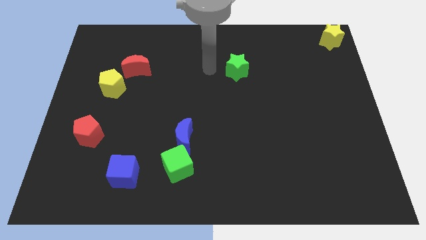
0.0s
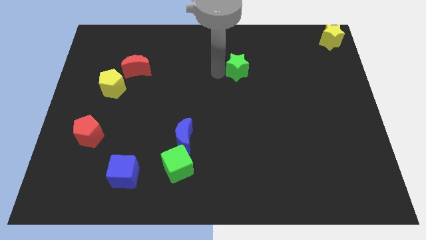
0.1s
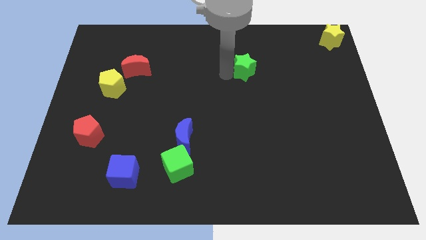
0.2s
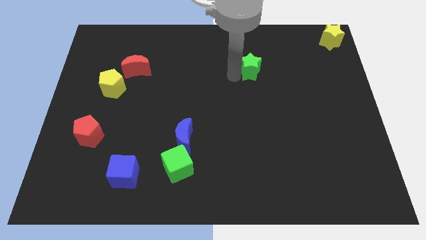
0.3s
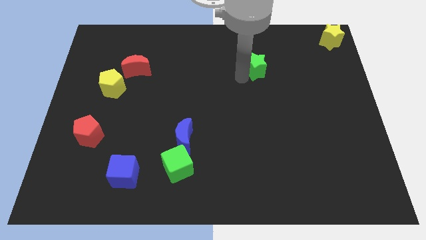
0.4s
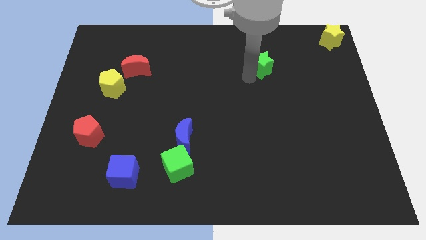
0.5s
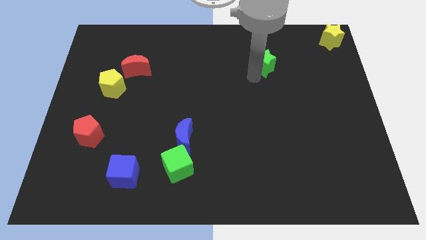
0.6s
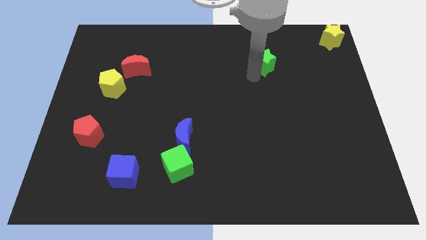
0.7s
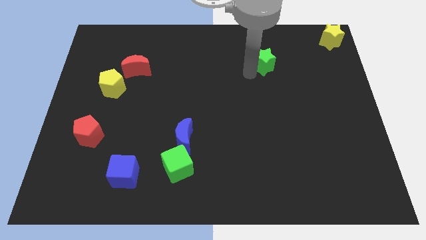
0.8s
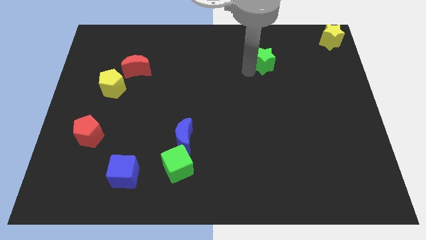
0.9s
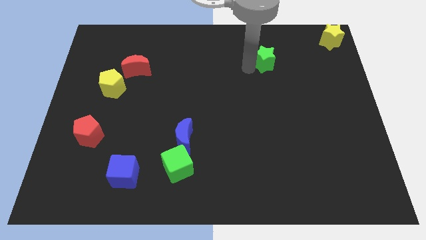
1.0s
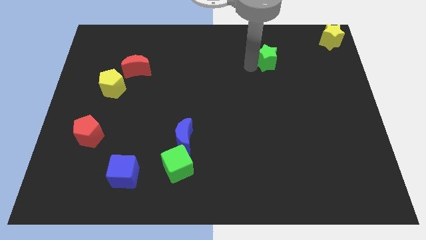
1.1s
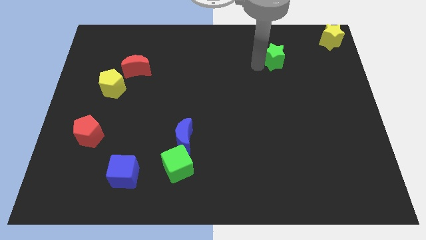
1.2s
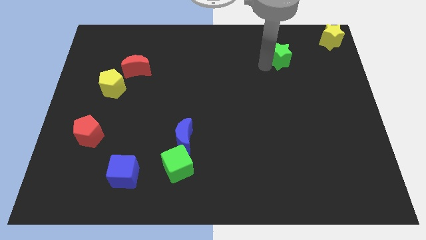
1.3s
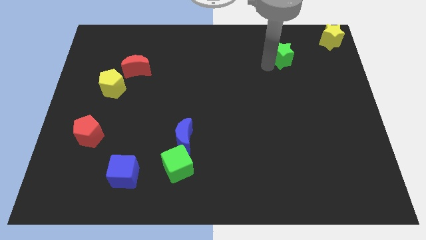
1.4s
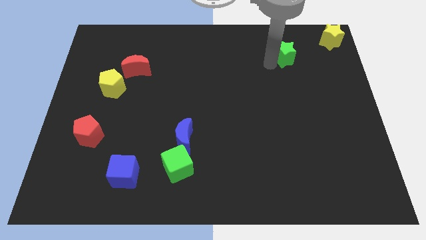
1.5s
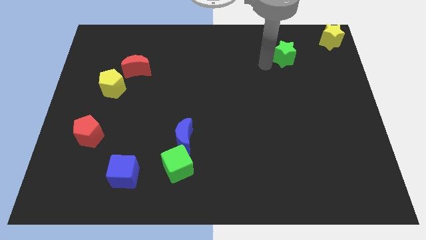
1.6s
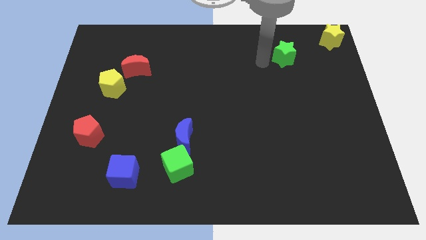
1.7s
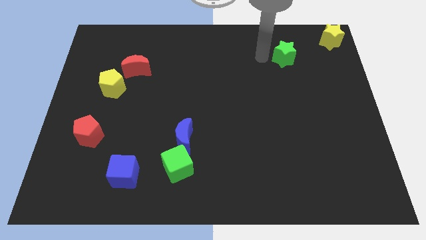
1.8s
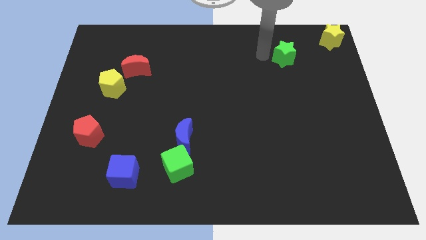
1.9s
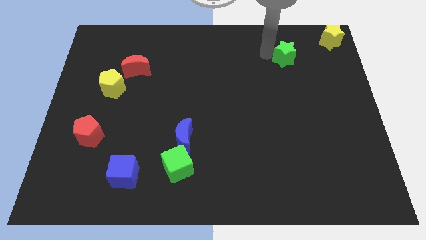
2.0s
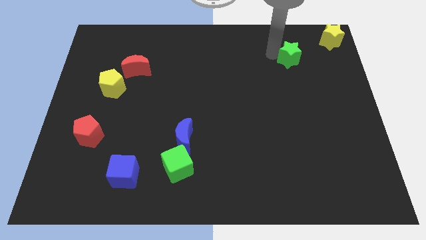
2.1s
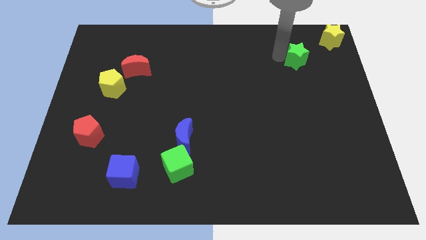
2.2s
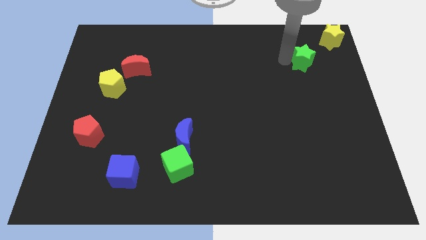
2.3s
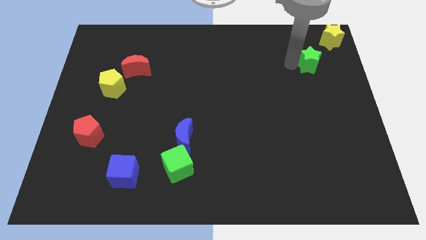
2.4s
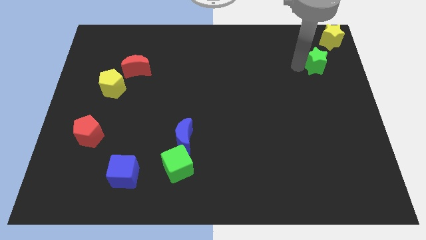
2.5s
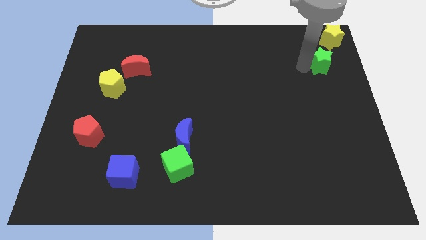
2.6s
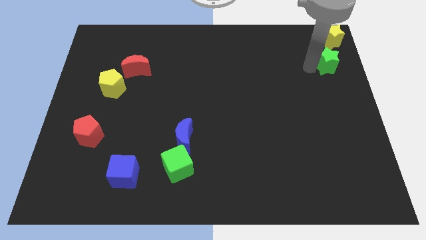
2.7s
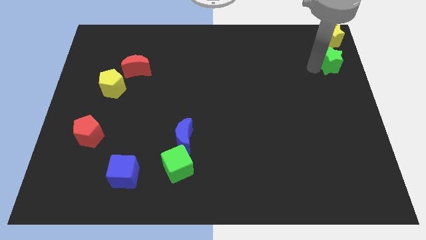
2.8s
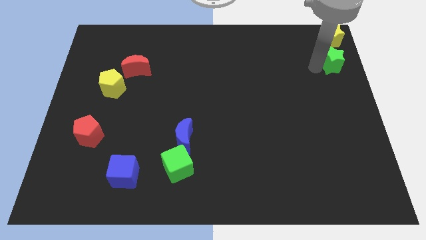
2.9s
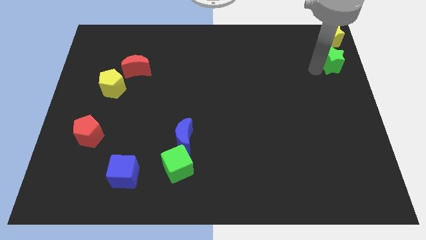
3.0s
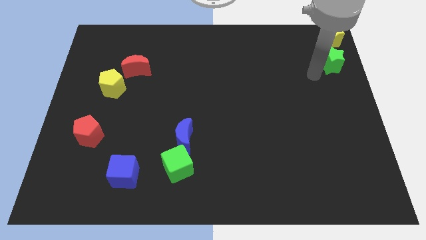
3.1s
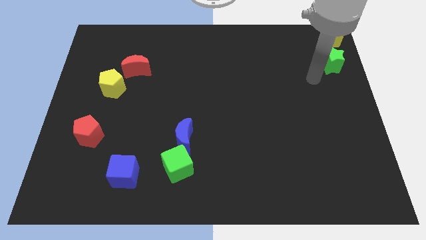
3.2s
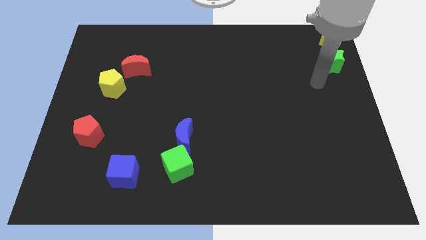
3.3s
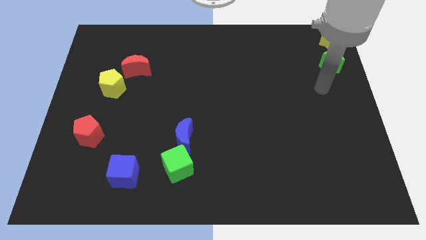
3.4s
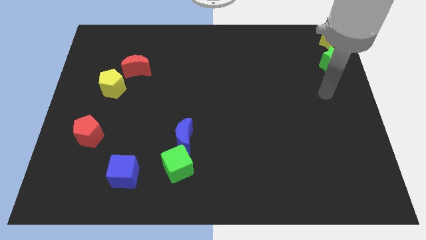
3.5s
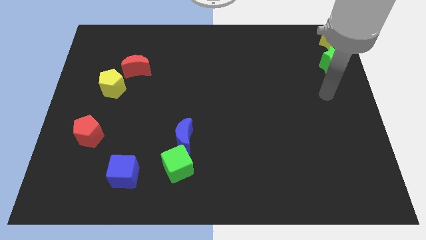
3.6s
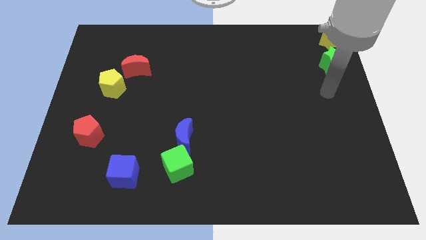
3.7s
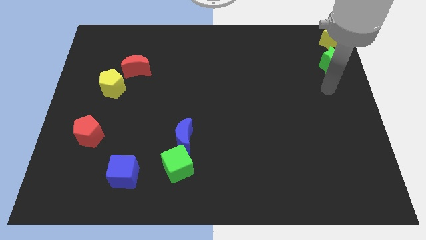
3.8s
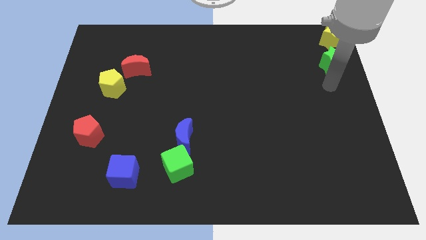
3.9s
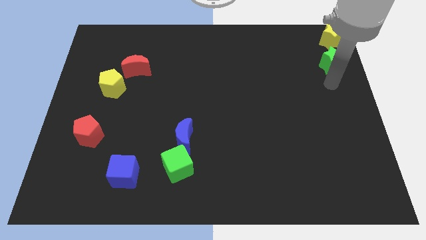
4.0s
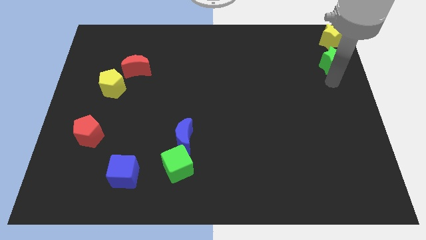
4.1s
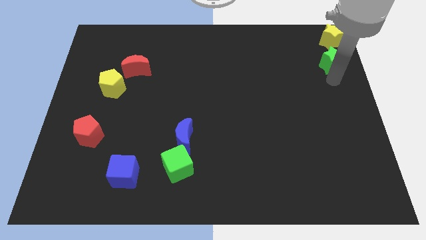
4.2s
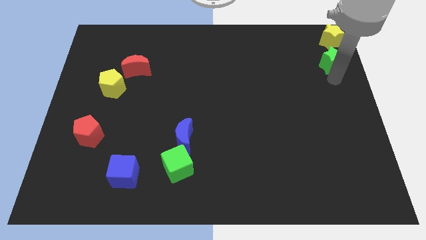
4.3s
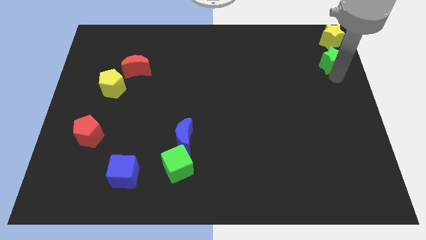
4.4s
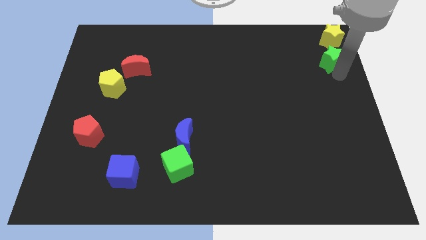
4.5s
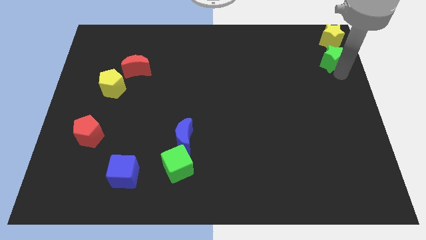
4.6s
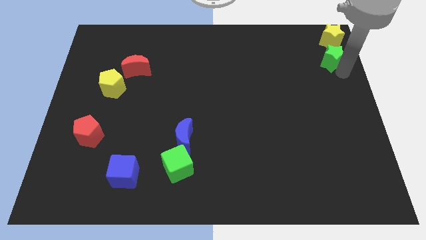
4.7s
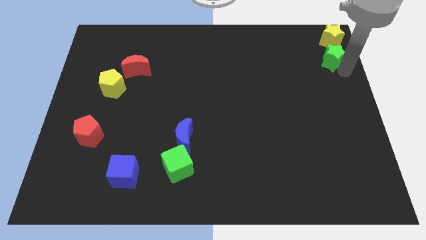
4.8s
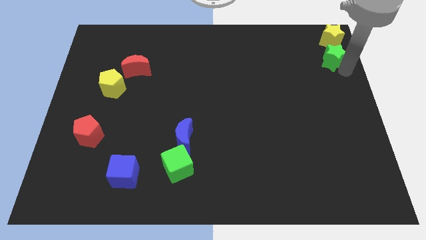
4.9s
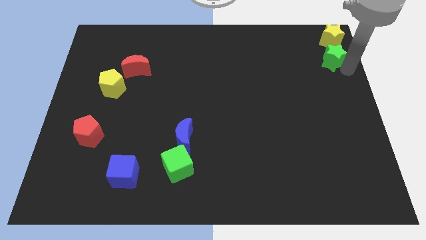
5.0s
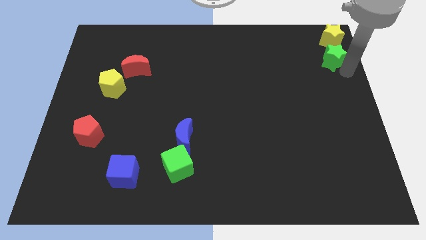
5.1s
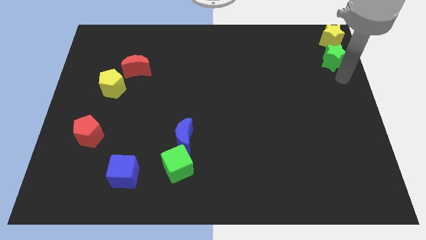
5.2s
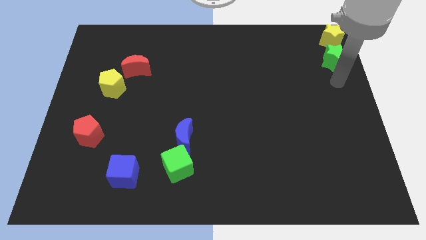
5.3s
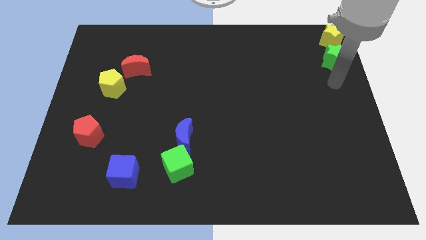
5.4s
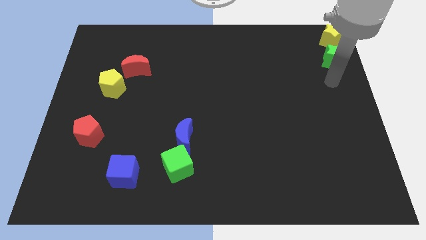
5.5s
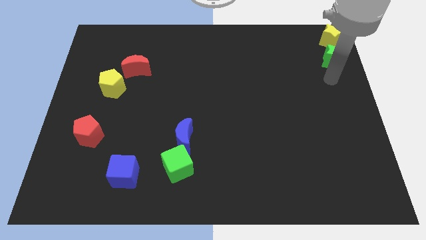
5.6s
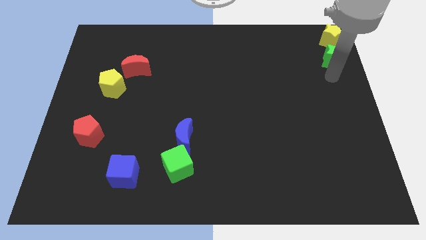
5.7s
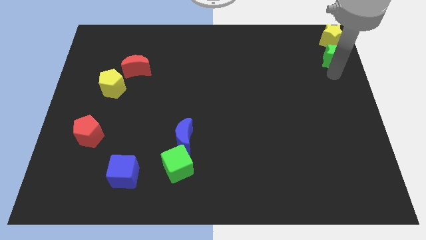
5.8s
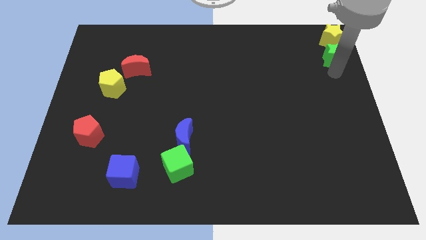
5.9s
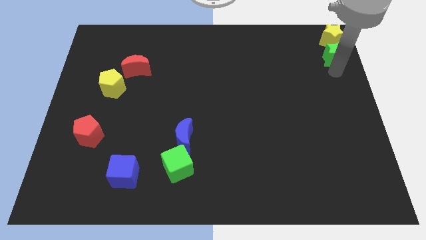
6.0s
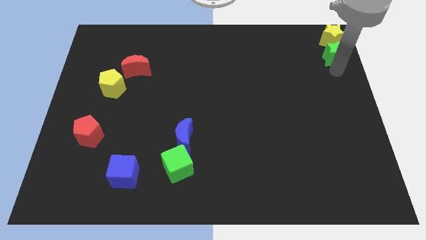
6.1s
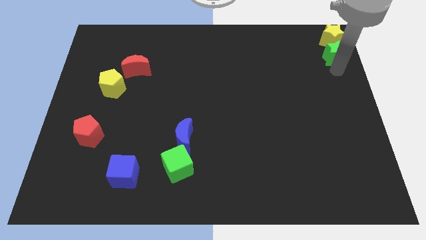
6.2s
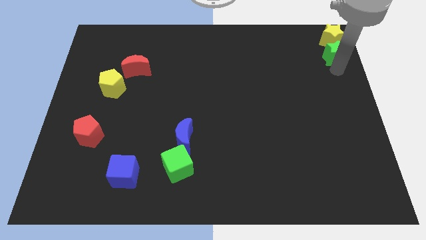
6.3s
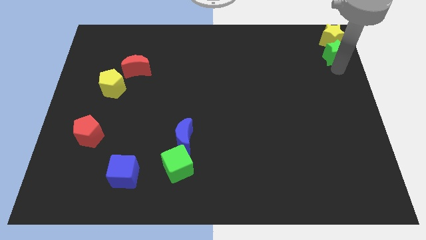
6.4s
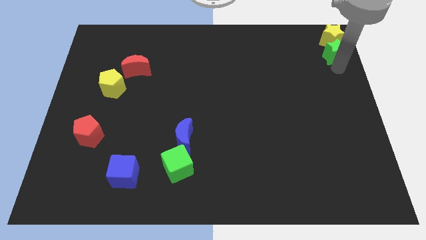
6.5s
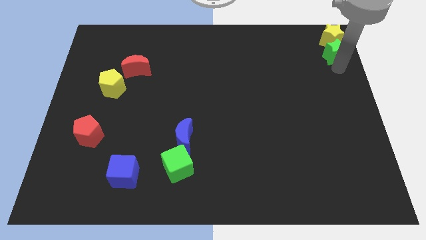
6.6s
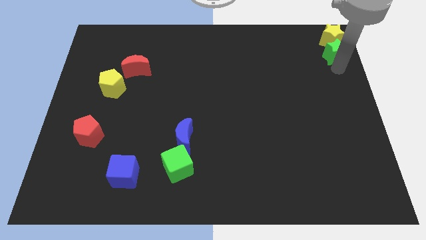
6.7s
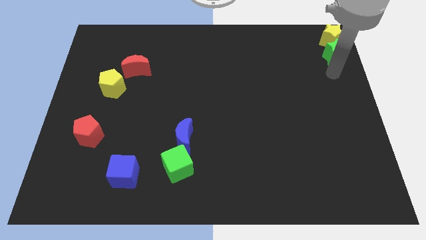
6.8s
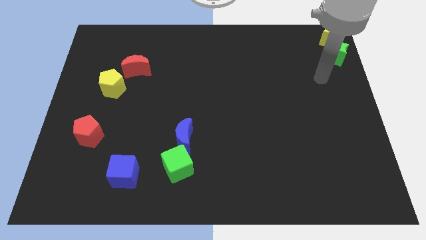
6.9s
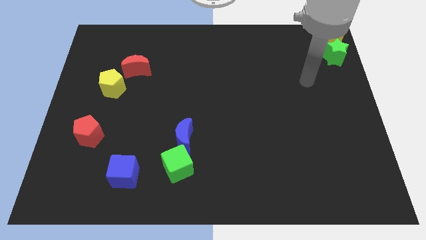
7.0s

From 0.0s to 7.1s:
move the green star to the bottom of the yellow star

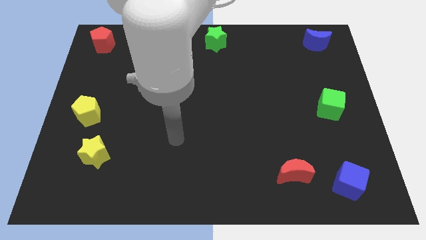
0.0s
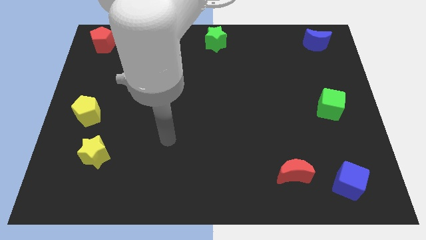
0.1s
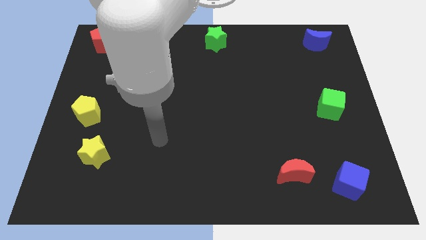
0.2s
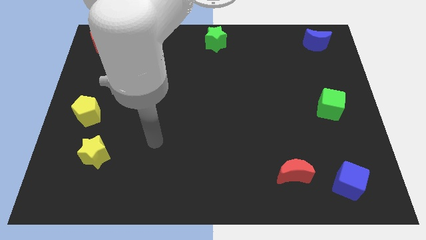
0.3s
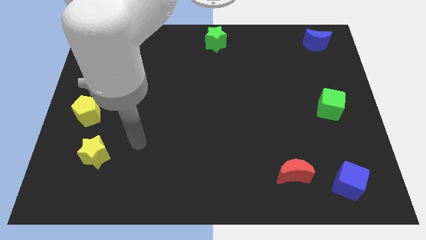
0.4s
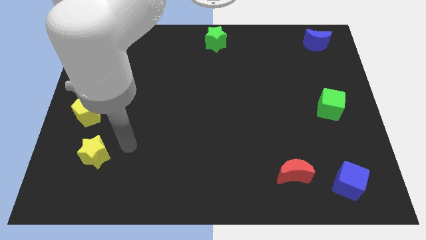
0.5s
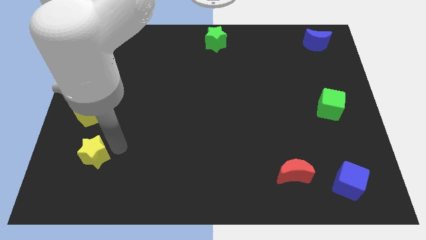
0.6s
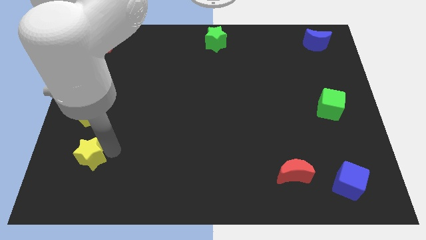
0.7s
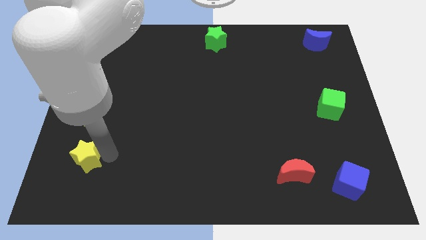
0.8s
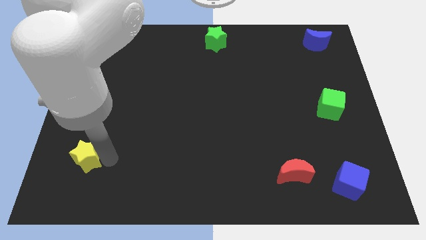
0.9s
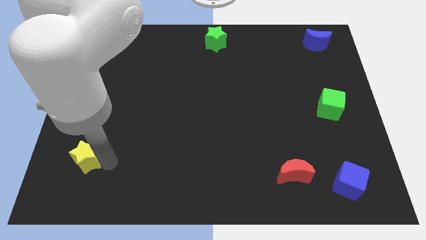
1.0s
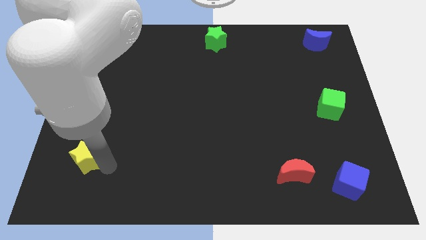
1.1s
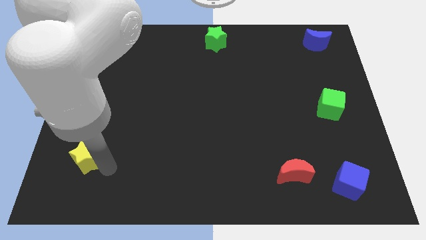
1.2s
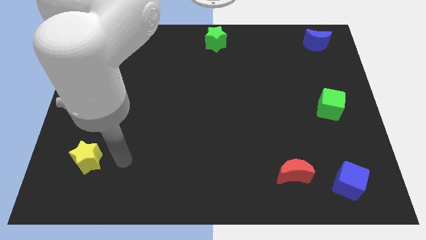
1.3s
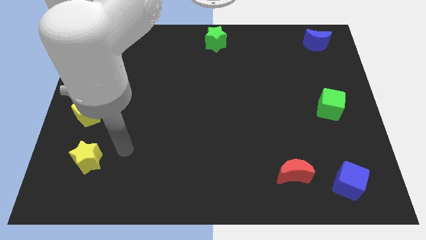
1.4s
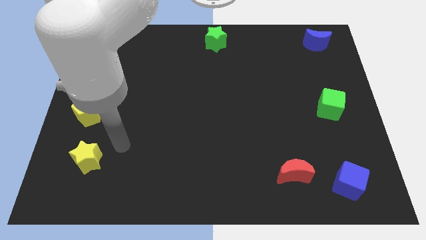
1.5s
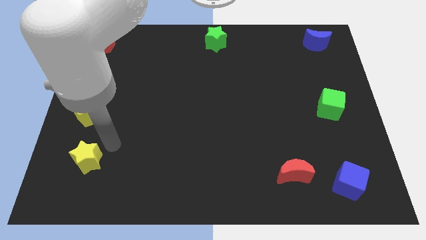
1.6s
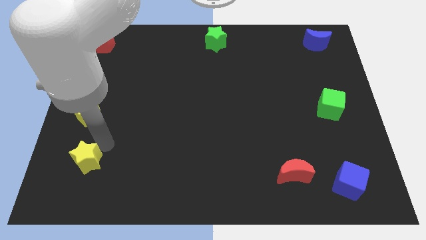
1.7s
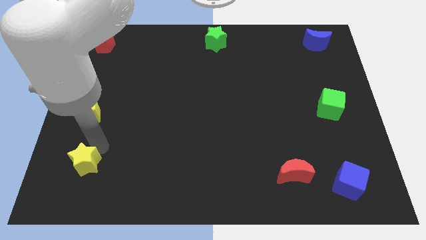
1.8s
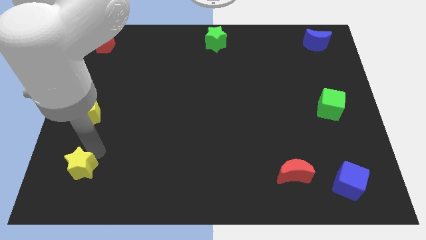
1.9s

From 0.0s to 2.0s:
slightly move the yellow star towards down
